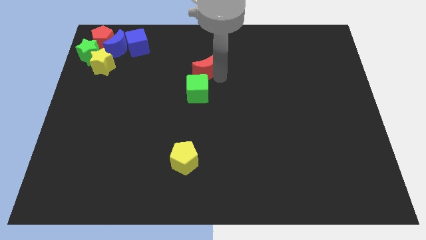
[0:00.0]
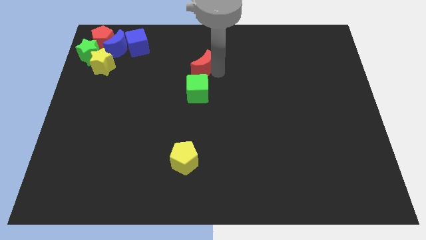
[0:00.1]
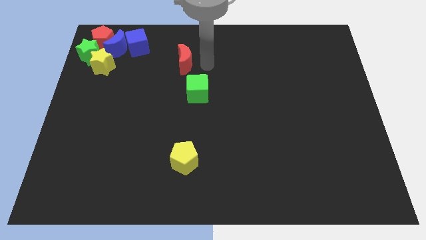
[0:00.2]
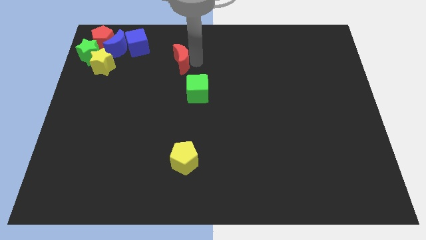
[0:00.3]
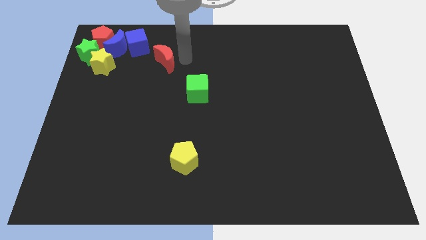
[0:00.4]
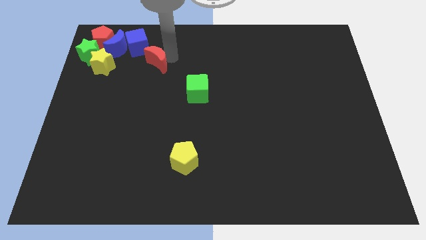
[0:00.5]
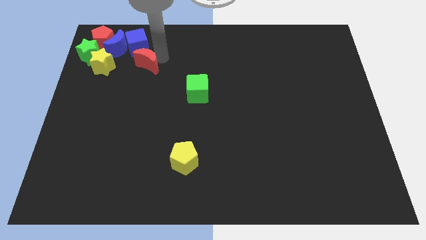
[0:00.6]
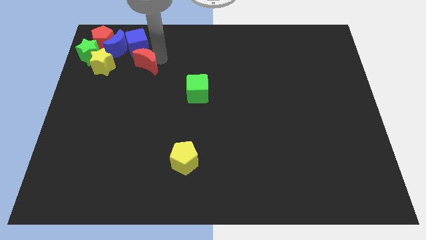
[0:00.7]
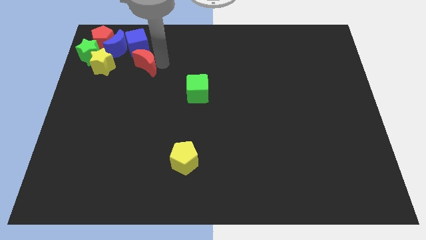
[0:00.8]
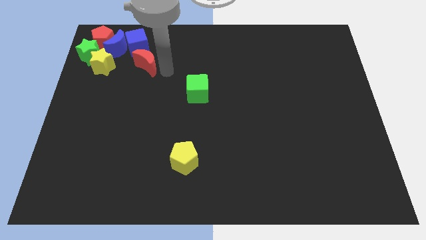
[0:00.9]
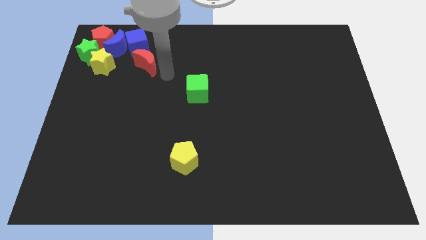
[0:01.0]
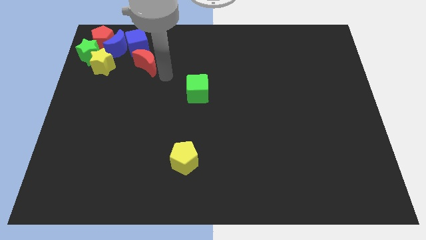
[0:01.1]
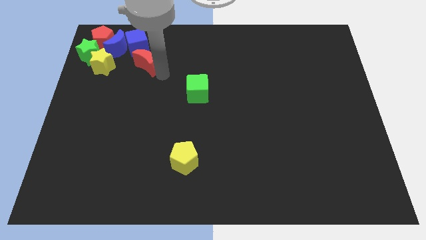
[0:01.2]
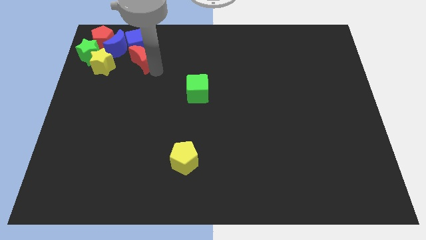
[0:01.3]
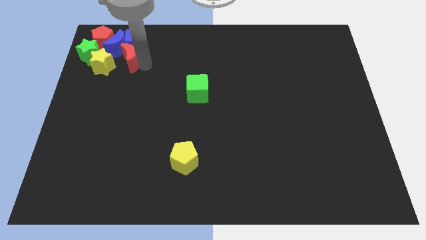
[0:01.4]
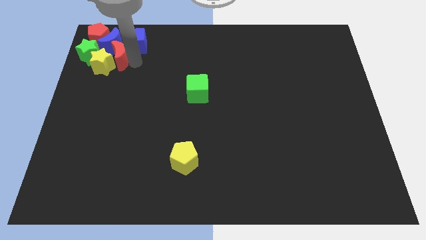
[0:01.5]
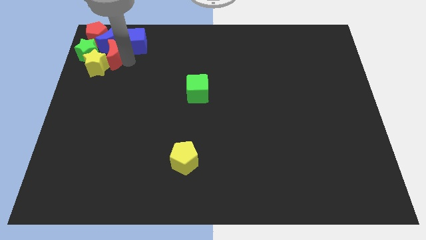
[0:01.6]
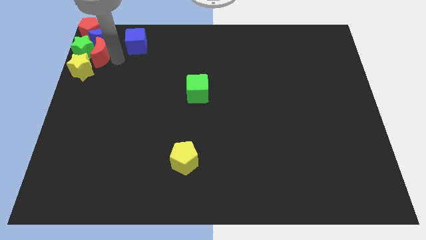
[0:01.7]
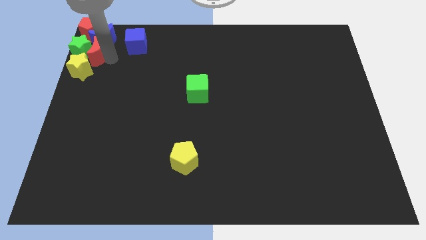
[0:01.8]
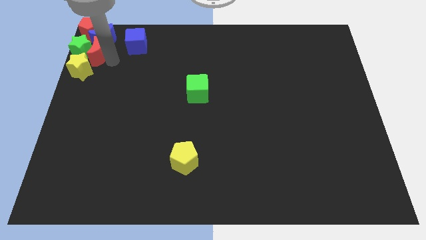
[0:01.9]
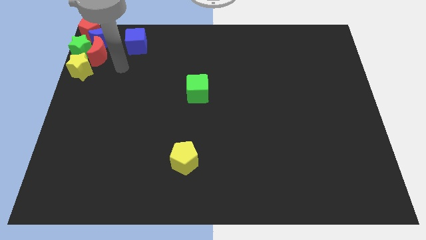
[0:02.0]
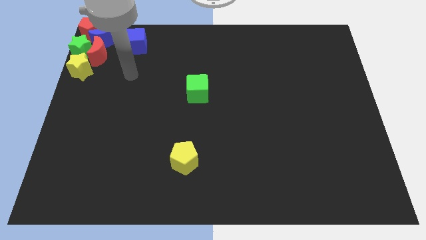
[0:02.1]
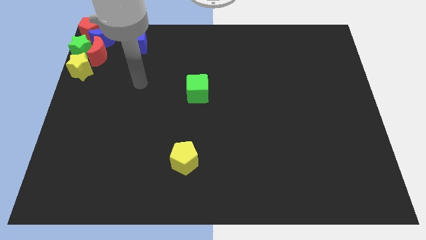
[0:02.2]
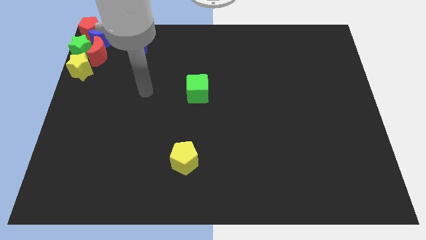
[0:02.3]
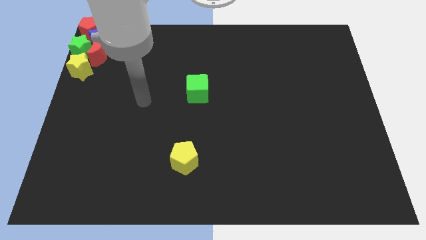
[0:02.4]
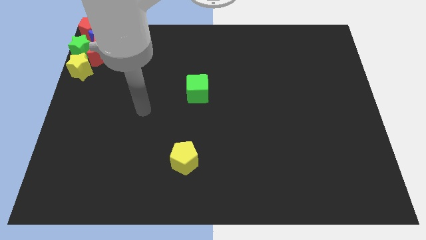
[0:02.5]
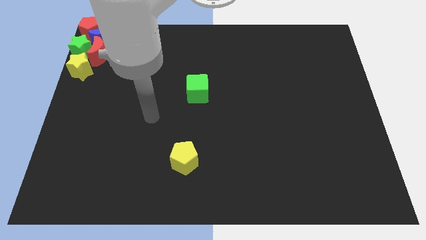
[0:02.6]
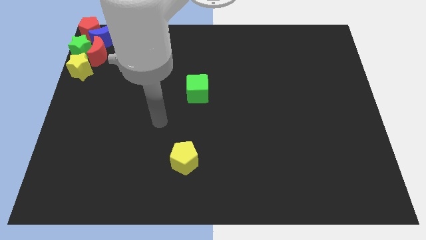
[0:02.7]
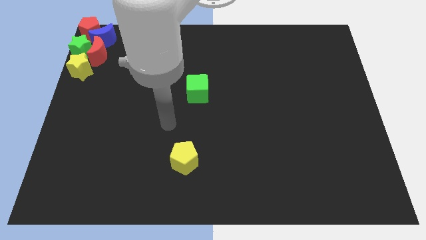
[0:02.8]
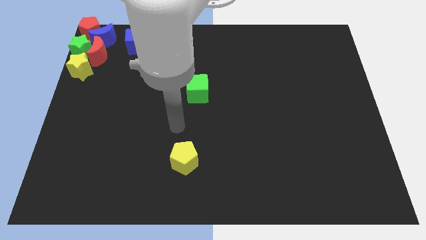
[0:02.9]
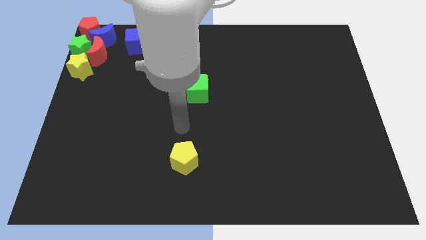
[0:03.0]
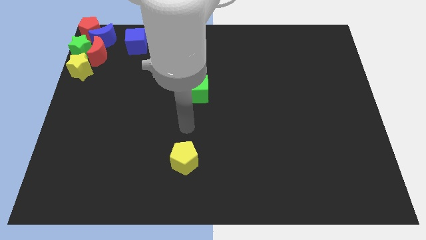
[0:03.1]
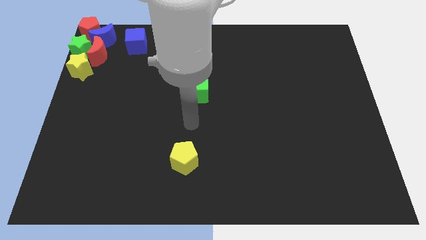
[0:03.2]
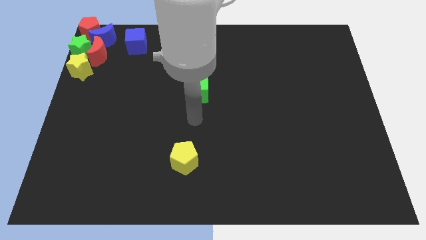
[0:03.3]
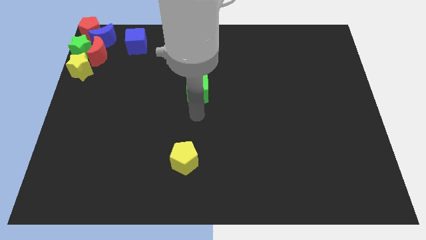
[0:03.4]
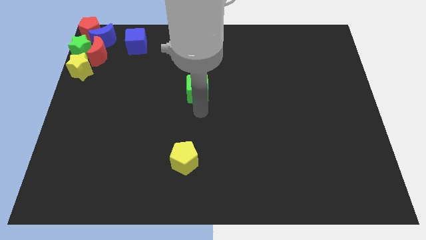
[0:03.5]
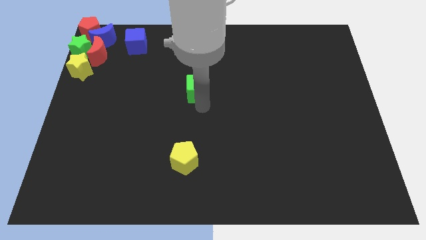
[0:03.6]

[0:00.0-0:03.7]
push the red moon into the group of blocks

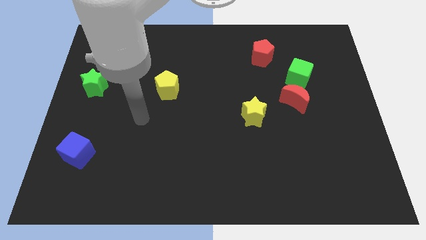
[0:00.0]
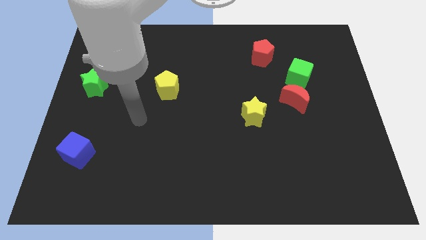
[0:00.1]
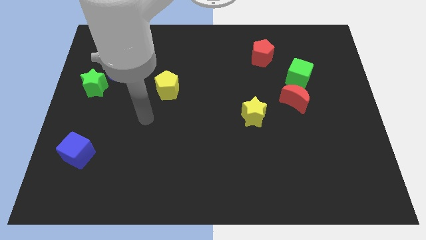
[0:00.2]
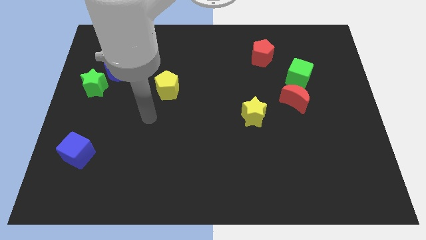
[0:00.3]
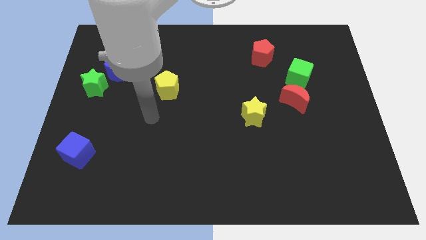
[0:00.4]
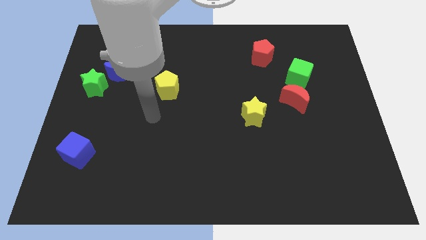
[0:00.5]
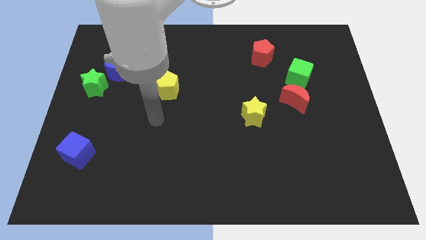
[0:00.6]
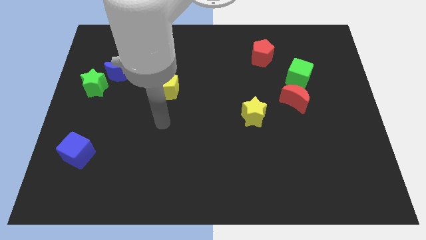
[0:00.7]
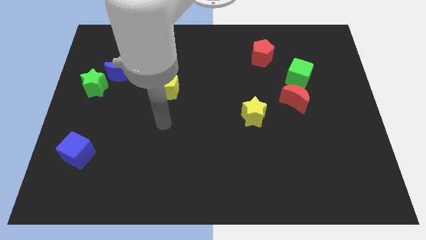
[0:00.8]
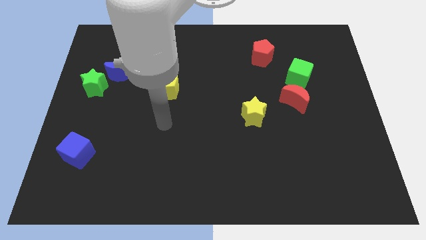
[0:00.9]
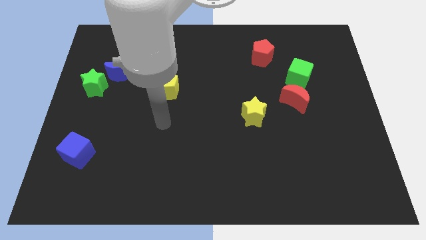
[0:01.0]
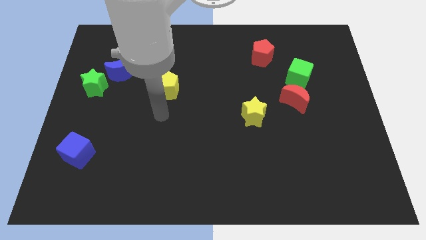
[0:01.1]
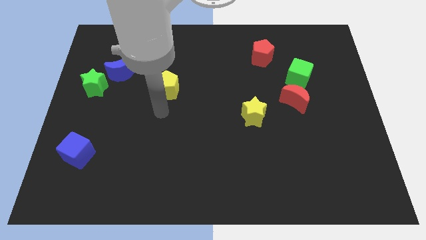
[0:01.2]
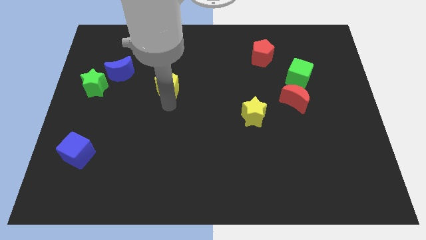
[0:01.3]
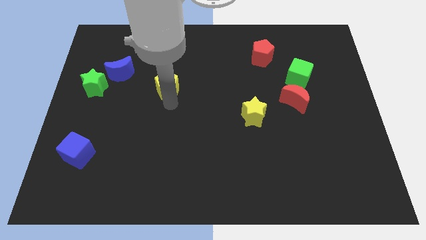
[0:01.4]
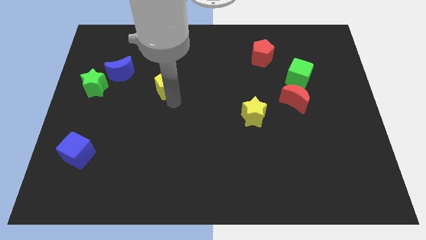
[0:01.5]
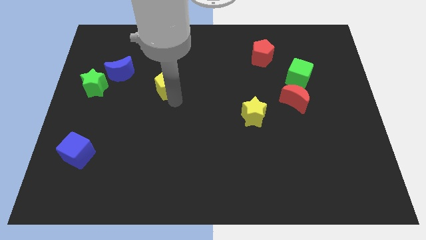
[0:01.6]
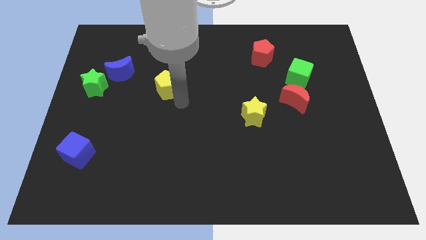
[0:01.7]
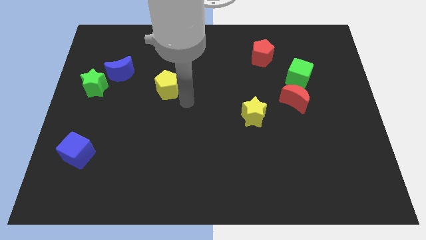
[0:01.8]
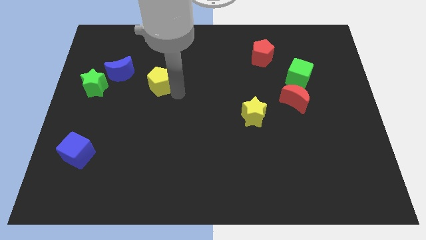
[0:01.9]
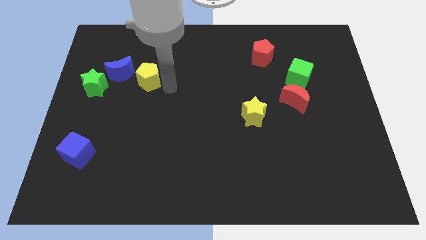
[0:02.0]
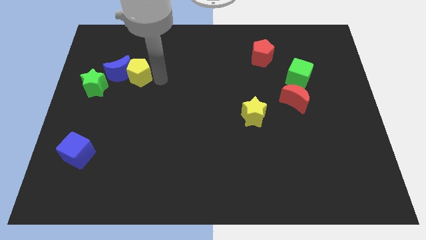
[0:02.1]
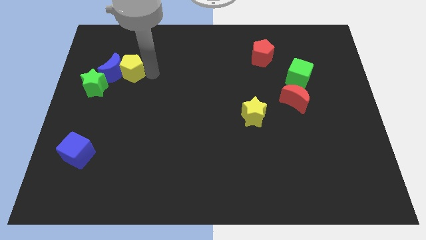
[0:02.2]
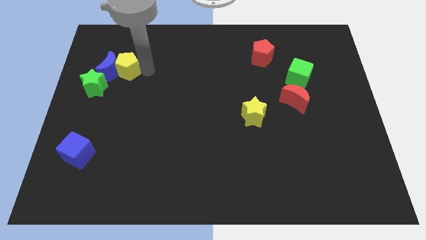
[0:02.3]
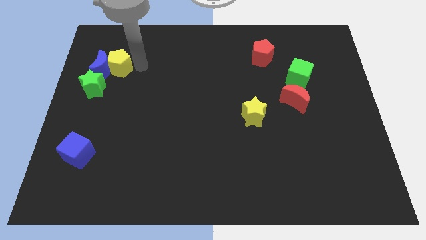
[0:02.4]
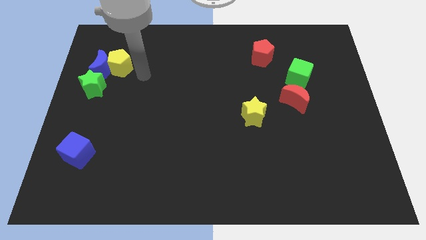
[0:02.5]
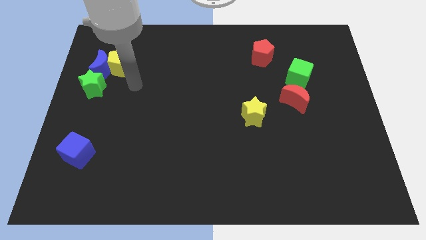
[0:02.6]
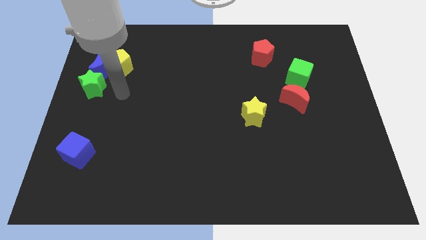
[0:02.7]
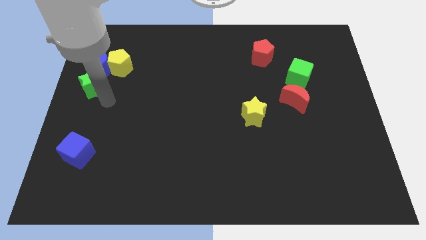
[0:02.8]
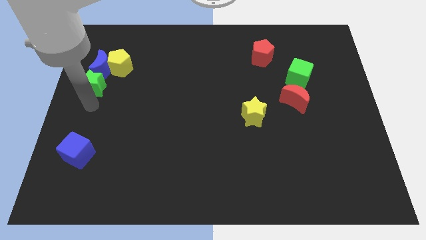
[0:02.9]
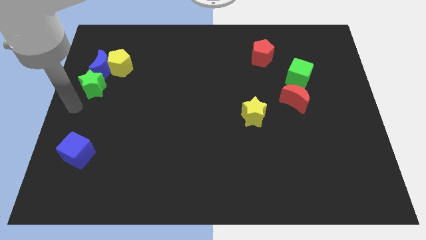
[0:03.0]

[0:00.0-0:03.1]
push yellow pentagon into the blue moon

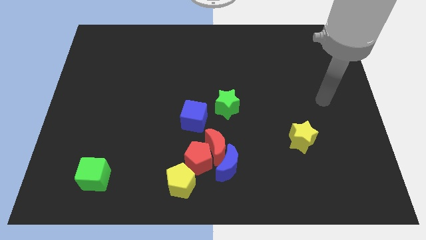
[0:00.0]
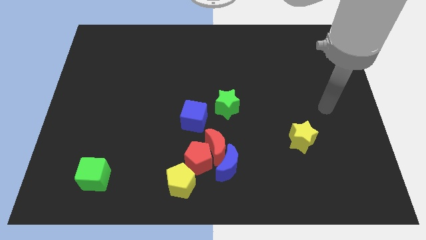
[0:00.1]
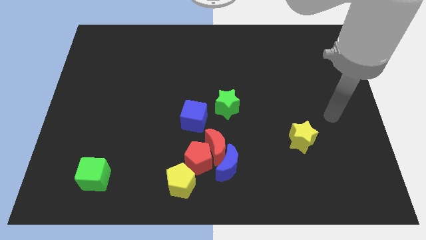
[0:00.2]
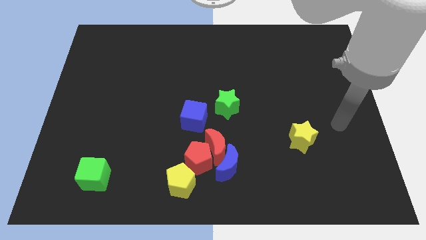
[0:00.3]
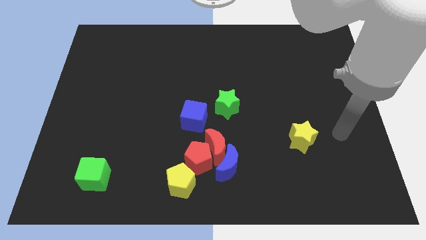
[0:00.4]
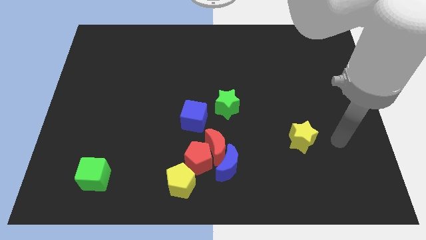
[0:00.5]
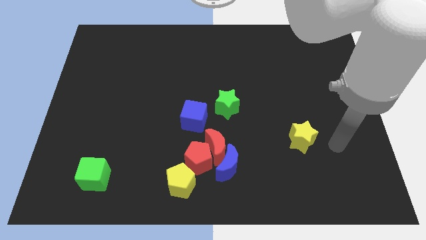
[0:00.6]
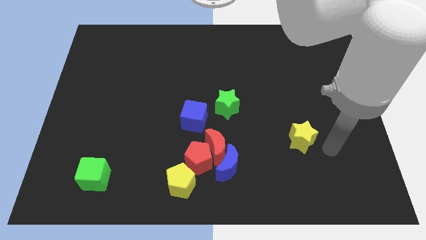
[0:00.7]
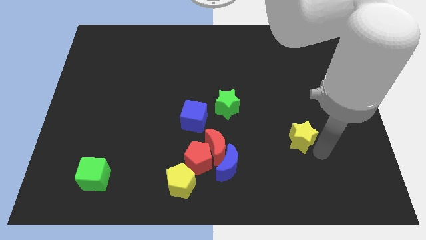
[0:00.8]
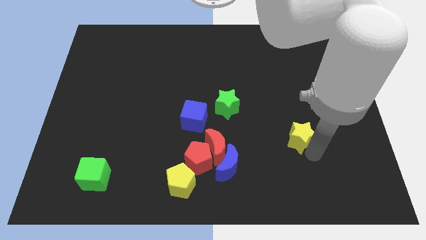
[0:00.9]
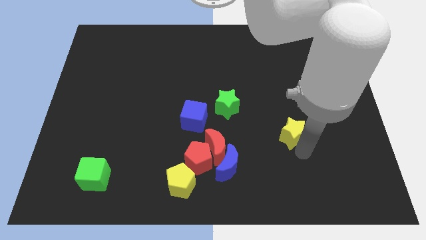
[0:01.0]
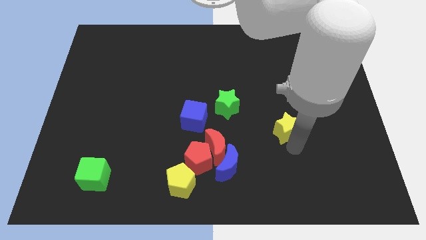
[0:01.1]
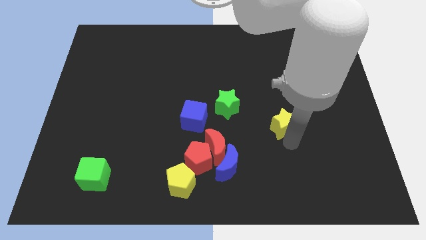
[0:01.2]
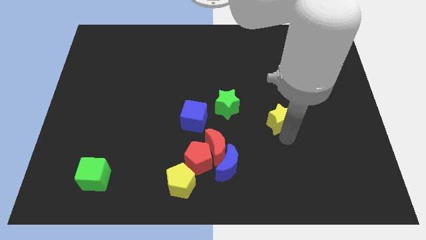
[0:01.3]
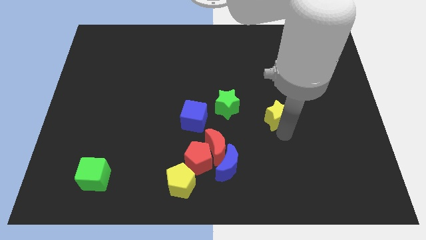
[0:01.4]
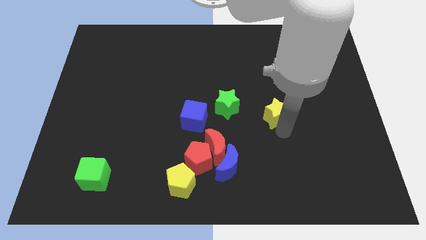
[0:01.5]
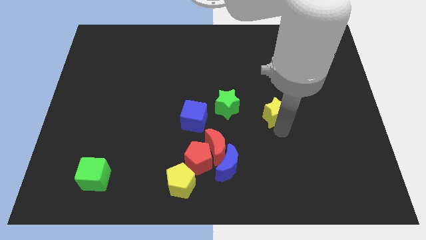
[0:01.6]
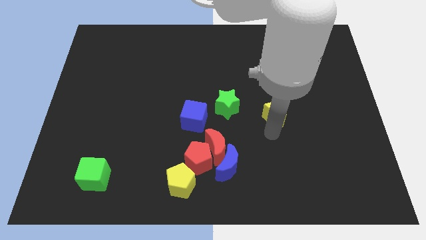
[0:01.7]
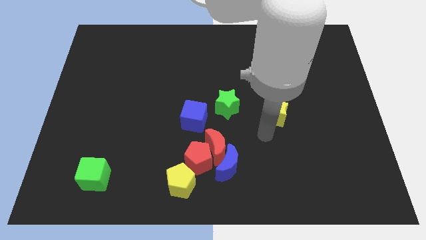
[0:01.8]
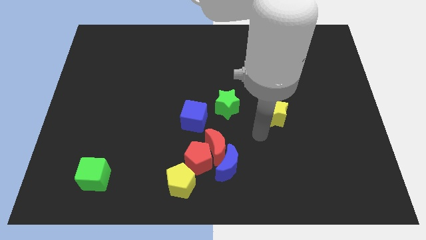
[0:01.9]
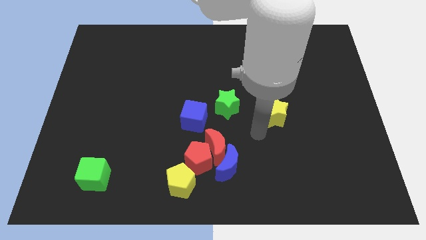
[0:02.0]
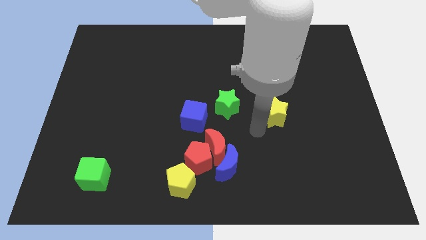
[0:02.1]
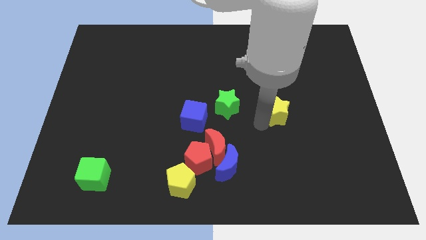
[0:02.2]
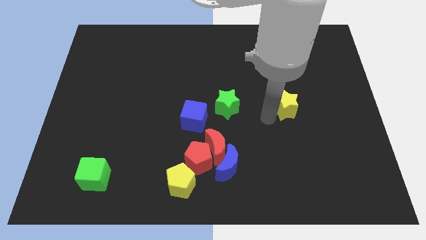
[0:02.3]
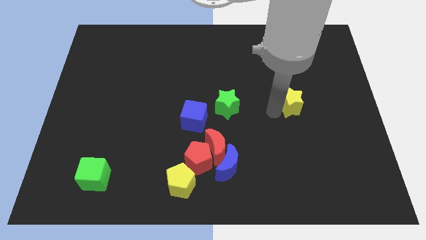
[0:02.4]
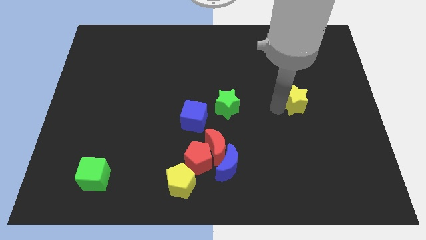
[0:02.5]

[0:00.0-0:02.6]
place the yellow star horizontally to the right side of the green star
